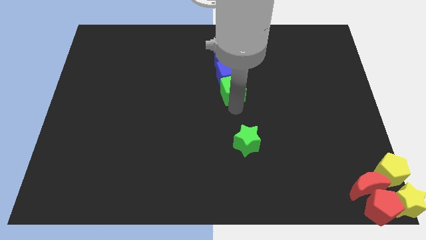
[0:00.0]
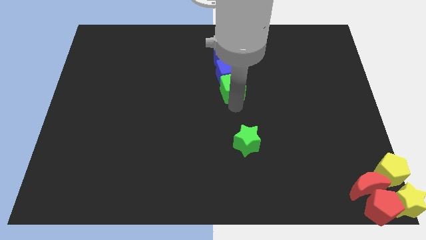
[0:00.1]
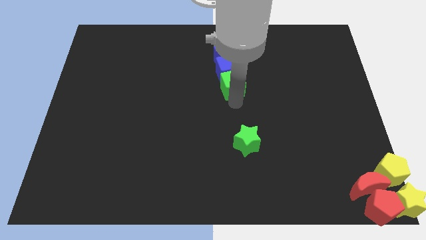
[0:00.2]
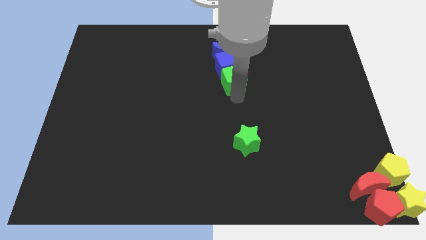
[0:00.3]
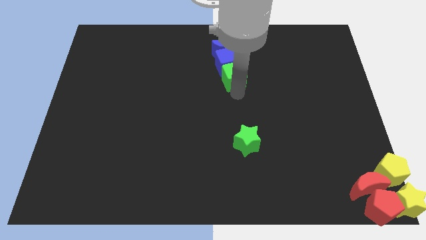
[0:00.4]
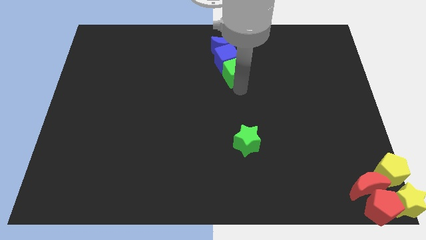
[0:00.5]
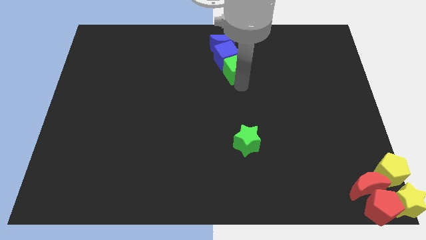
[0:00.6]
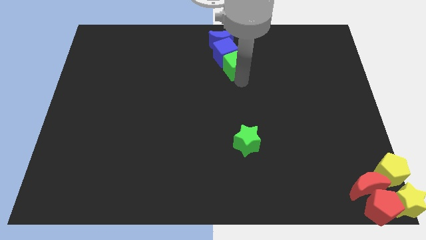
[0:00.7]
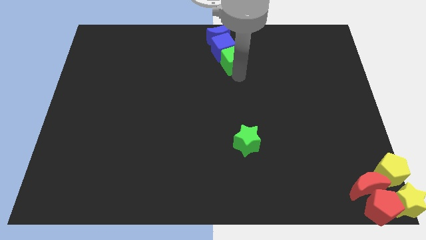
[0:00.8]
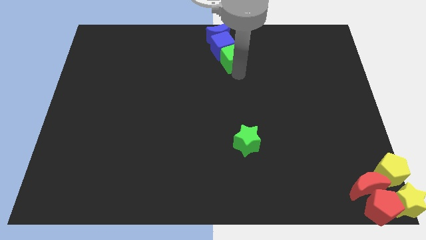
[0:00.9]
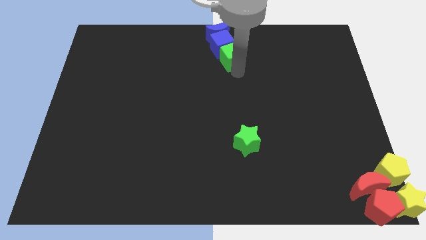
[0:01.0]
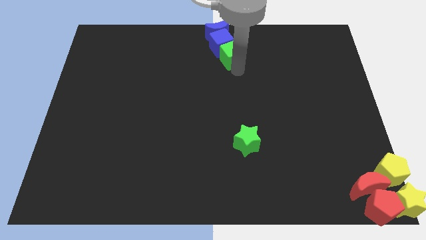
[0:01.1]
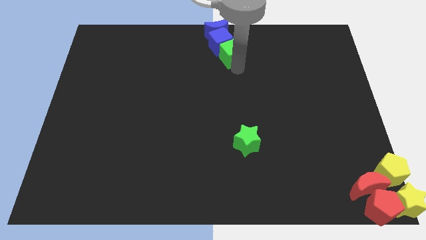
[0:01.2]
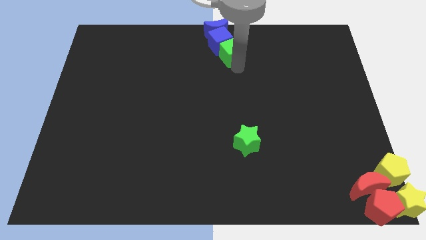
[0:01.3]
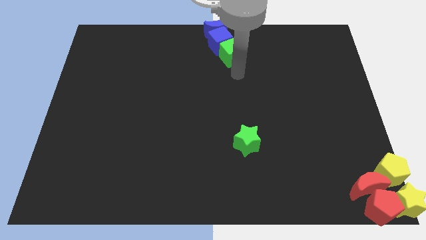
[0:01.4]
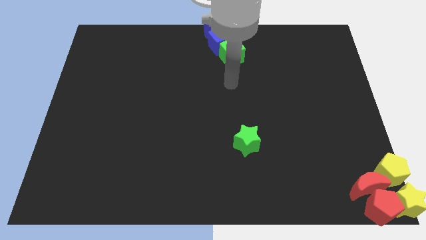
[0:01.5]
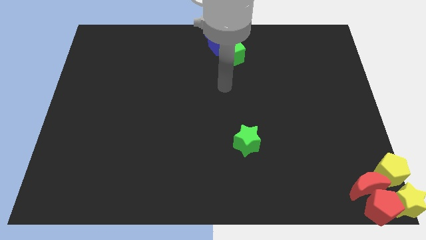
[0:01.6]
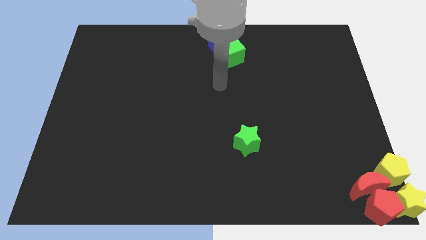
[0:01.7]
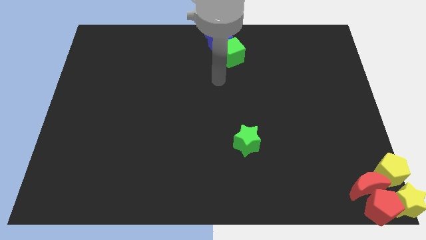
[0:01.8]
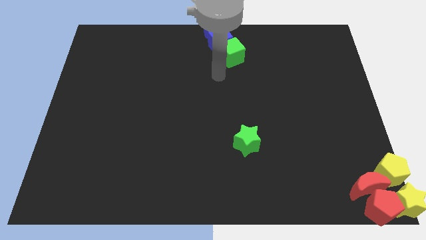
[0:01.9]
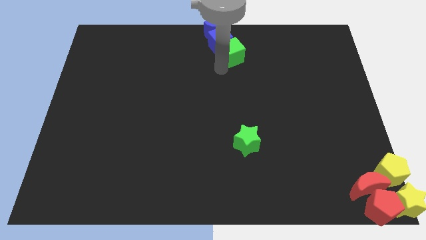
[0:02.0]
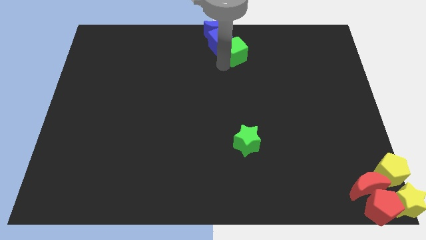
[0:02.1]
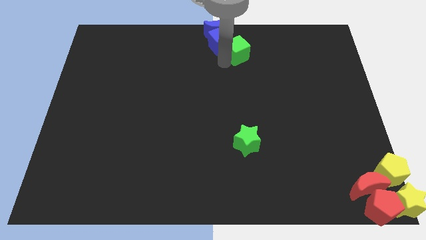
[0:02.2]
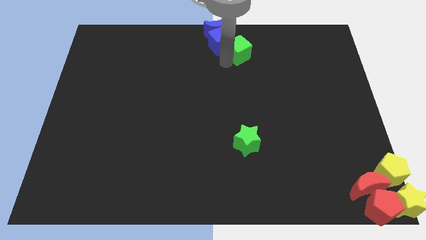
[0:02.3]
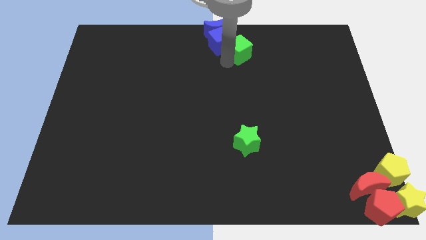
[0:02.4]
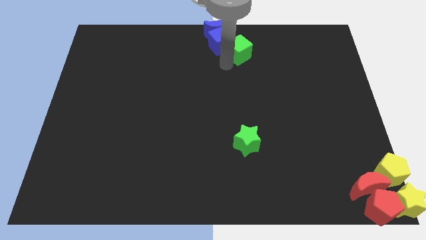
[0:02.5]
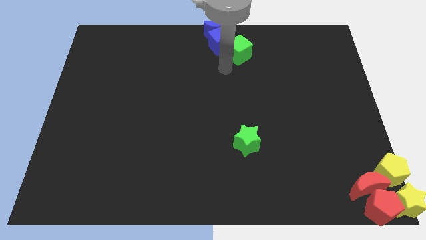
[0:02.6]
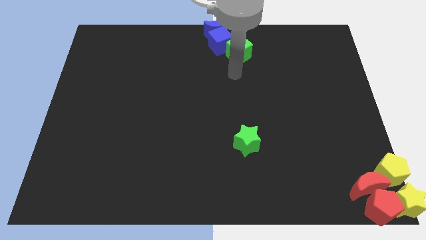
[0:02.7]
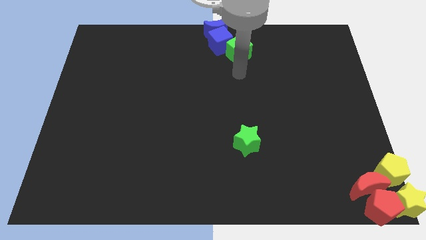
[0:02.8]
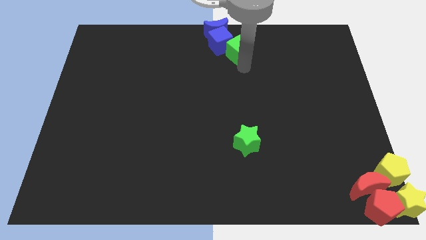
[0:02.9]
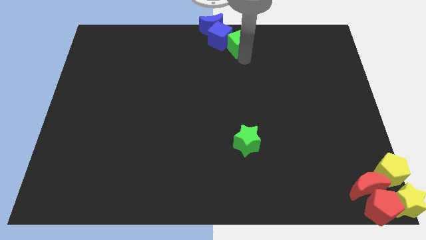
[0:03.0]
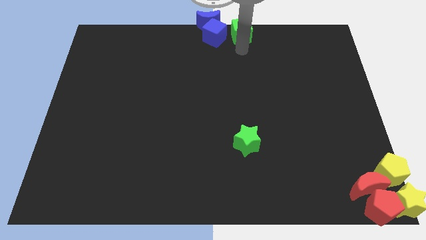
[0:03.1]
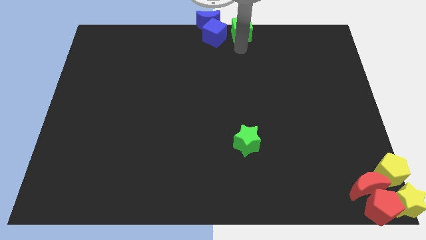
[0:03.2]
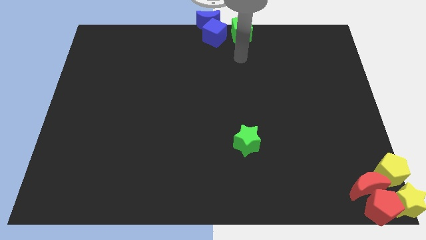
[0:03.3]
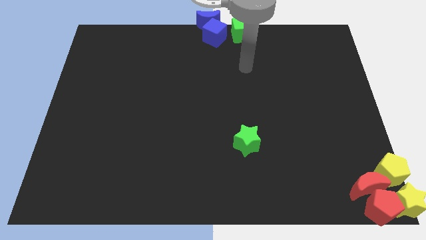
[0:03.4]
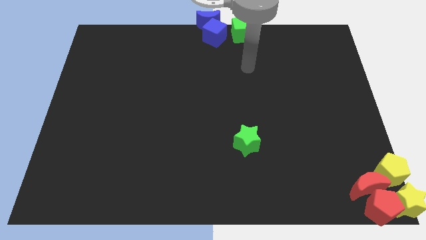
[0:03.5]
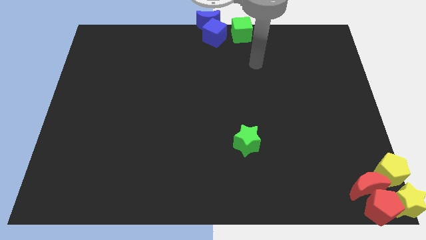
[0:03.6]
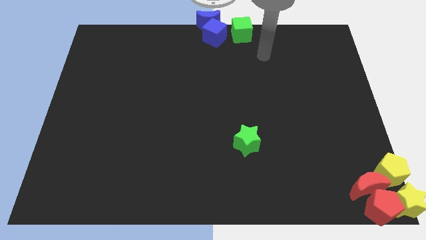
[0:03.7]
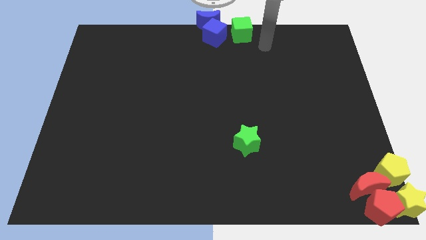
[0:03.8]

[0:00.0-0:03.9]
push the blue blocks and green cube at the top center of the board

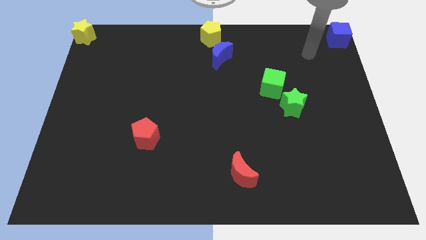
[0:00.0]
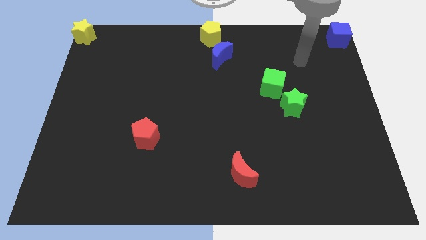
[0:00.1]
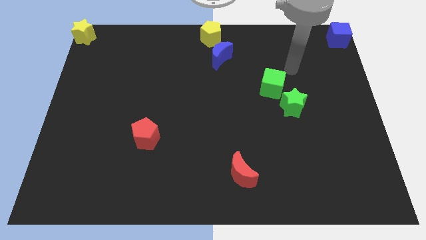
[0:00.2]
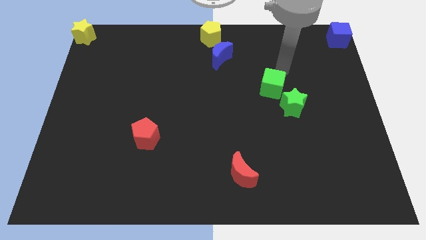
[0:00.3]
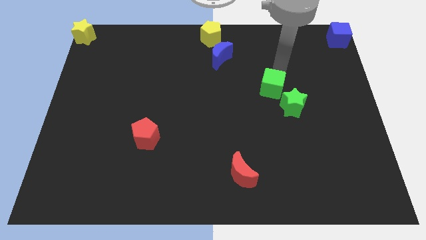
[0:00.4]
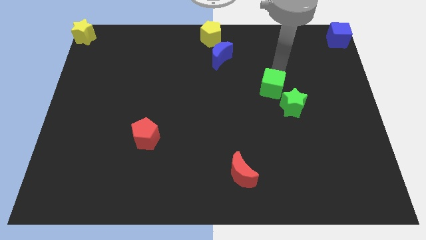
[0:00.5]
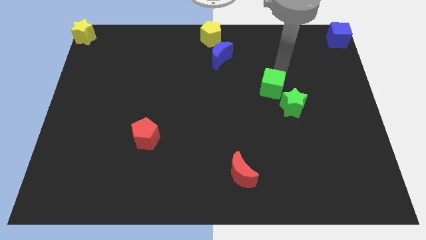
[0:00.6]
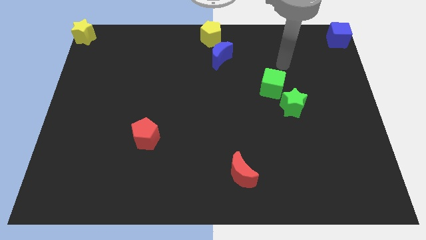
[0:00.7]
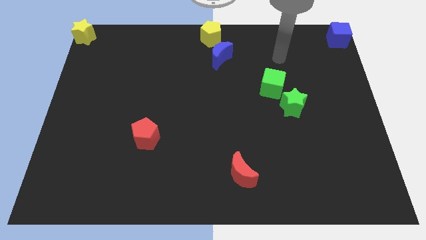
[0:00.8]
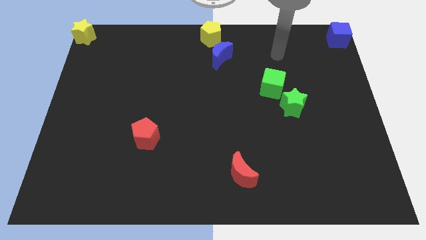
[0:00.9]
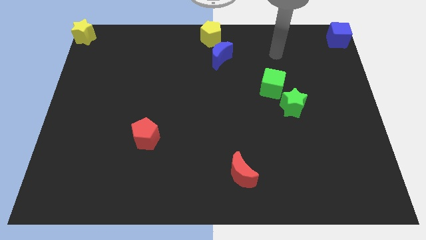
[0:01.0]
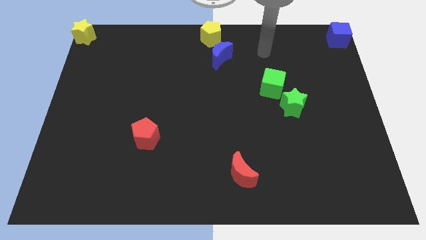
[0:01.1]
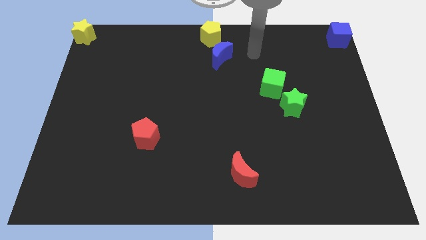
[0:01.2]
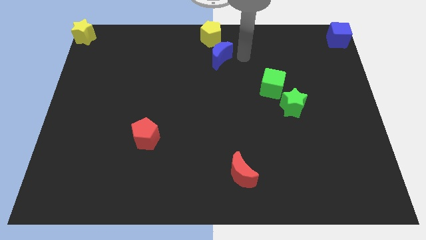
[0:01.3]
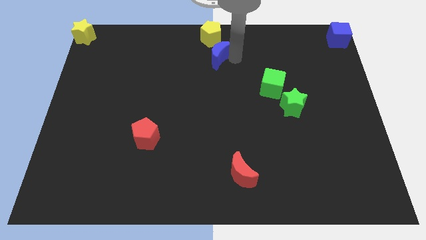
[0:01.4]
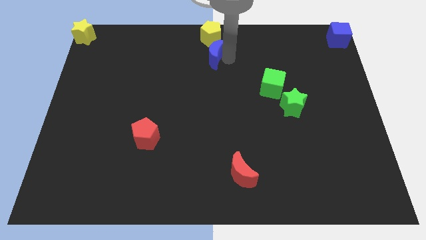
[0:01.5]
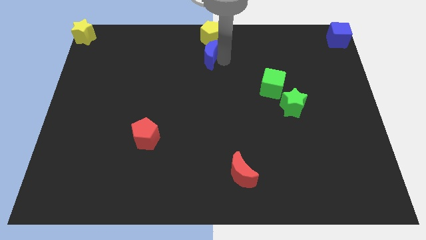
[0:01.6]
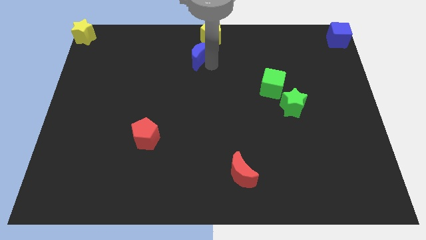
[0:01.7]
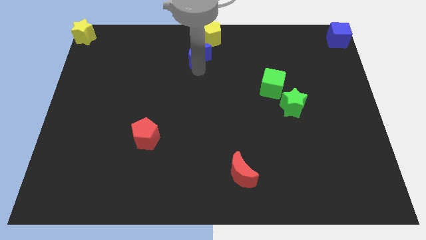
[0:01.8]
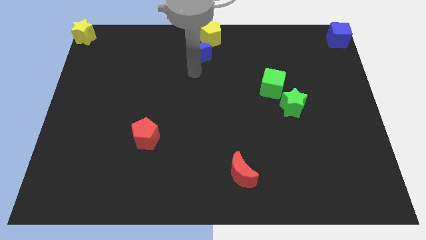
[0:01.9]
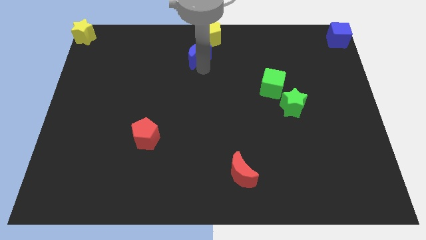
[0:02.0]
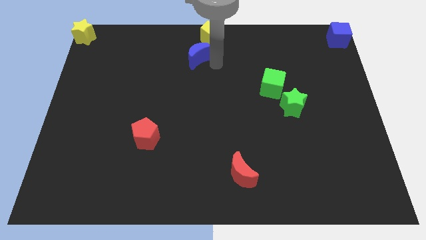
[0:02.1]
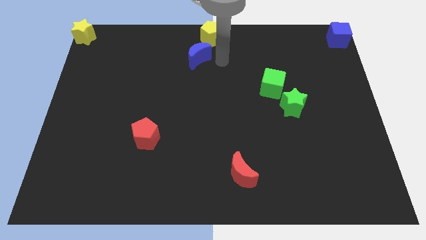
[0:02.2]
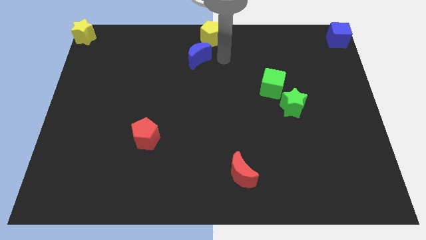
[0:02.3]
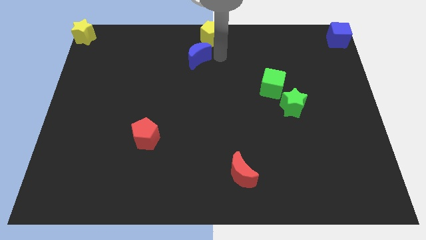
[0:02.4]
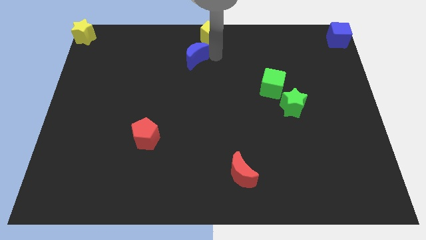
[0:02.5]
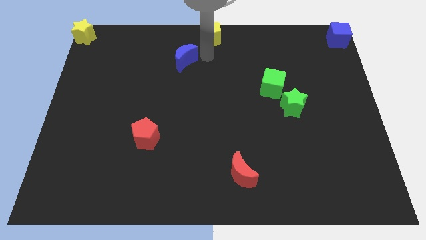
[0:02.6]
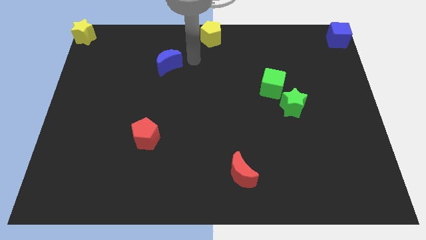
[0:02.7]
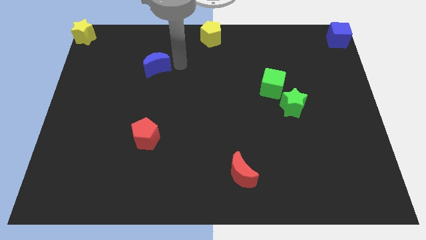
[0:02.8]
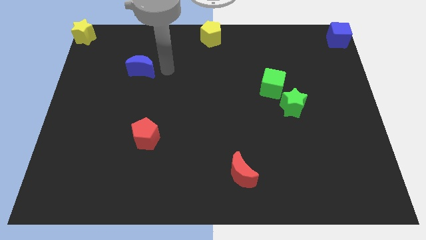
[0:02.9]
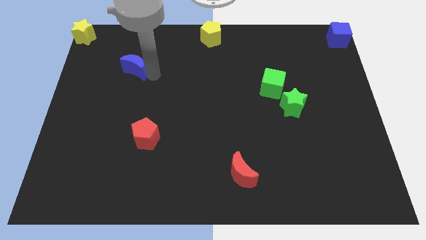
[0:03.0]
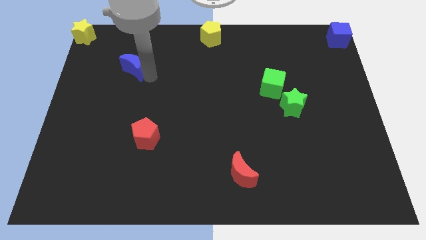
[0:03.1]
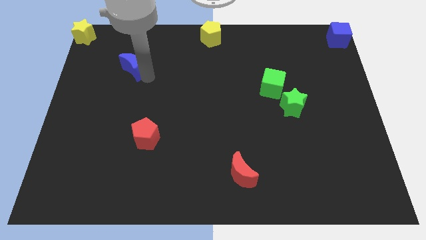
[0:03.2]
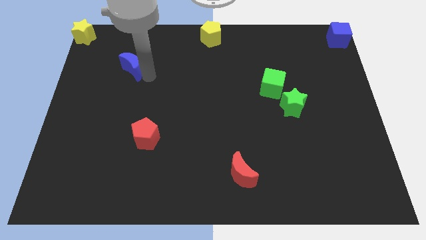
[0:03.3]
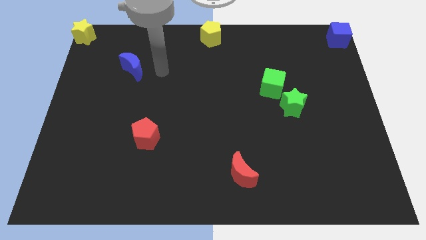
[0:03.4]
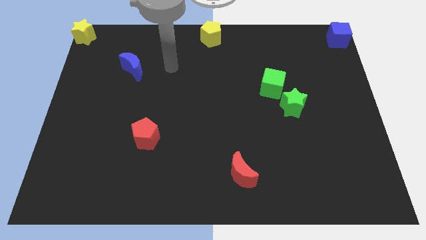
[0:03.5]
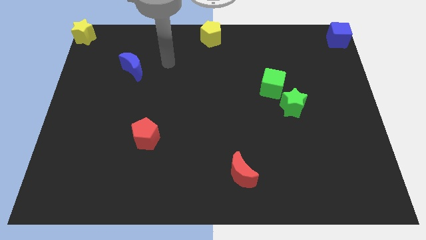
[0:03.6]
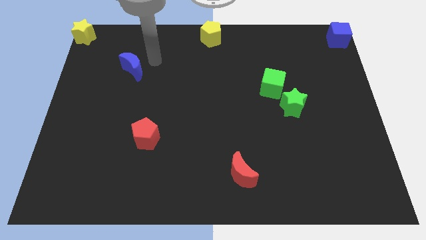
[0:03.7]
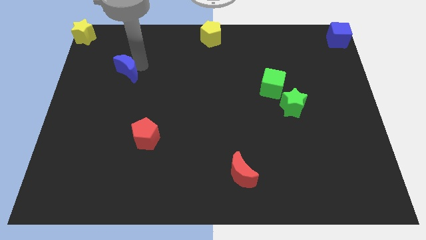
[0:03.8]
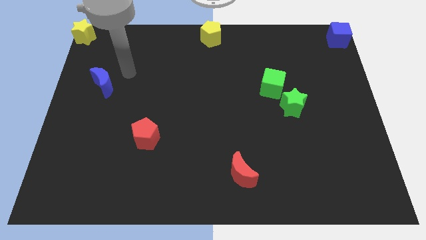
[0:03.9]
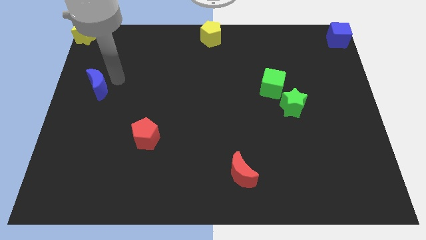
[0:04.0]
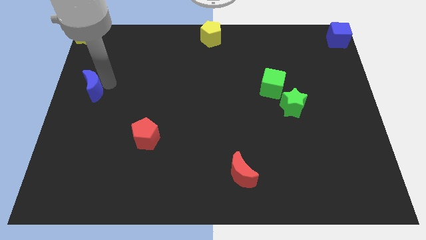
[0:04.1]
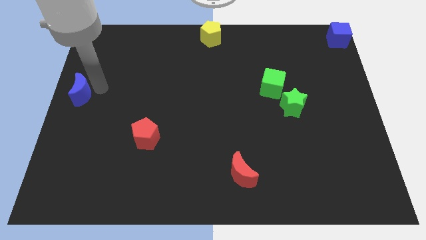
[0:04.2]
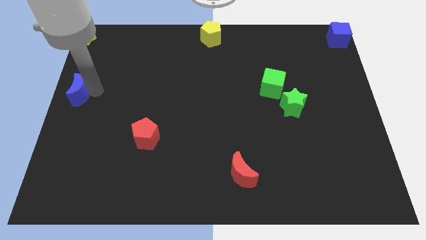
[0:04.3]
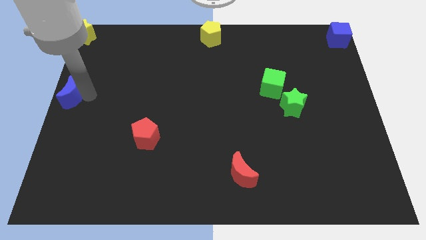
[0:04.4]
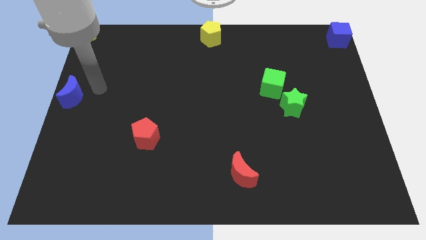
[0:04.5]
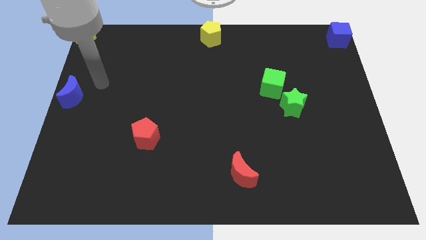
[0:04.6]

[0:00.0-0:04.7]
place the blue moon to center left

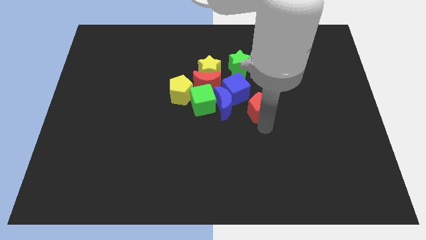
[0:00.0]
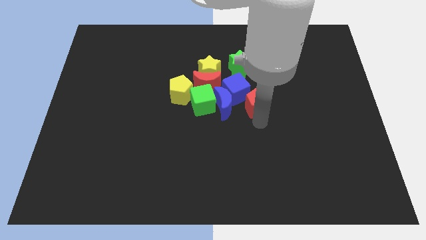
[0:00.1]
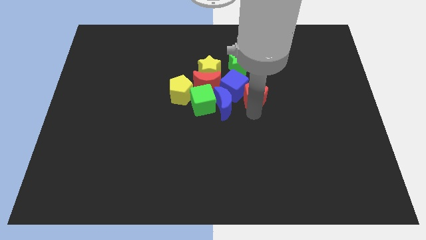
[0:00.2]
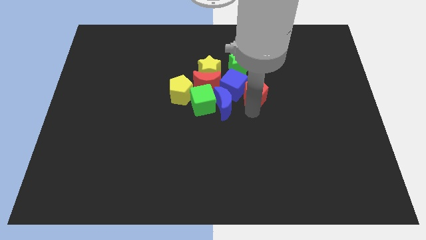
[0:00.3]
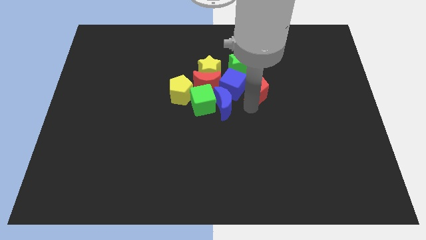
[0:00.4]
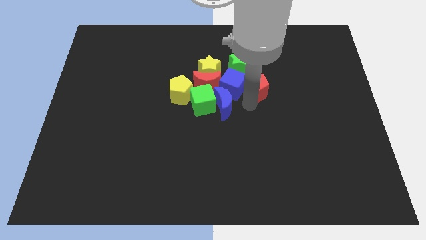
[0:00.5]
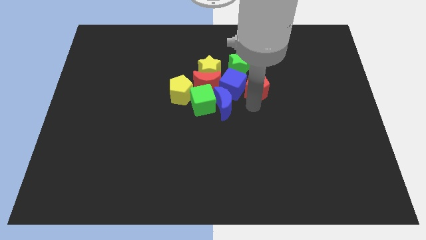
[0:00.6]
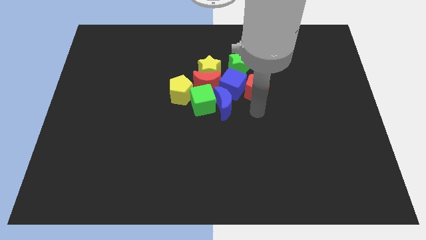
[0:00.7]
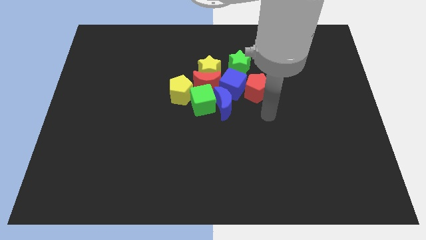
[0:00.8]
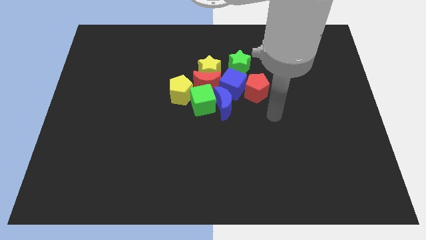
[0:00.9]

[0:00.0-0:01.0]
push the red pentagon into the blue cube
